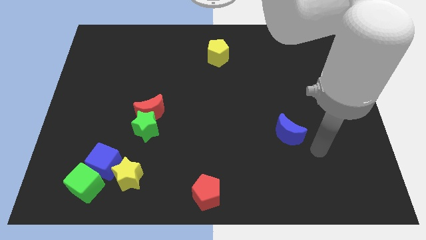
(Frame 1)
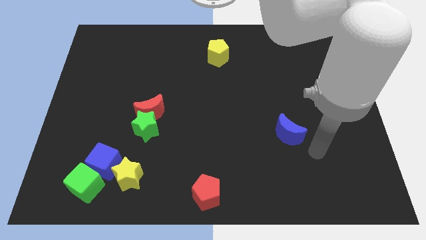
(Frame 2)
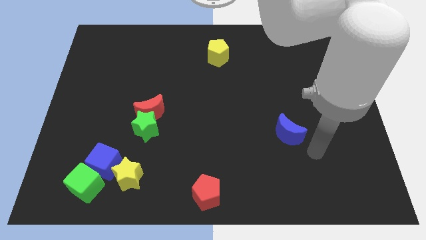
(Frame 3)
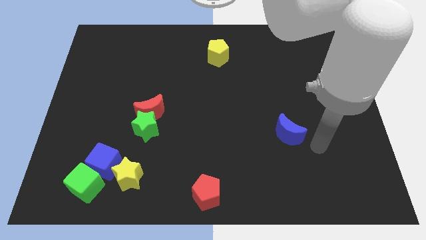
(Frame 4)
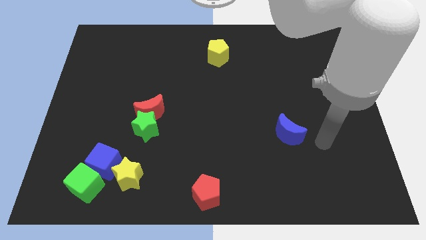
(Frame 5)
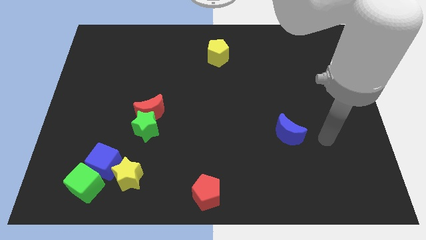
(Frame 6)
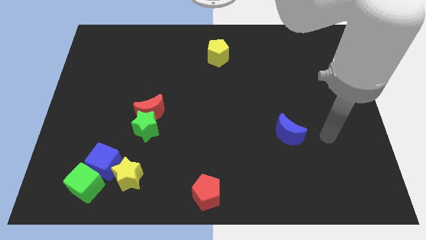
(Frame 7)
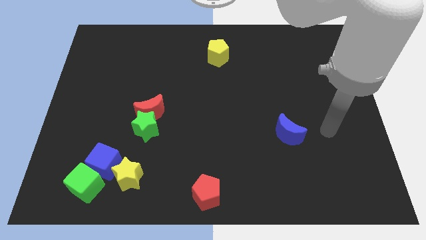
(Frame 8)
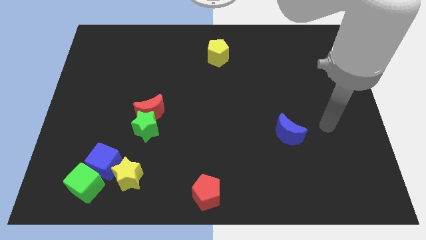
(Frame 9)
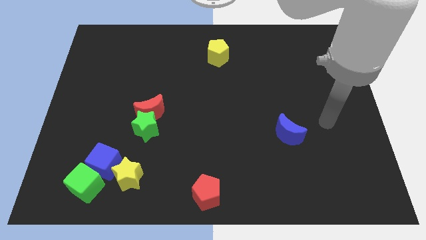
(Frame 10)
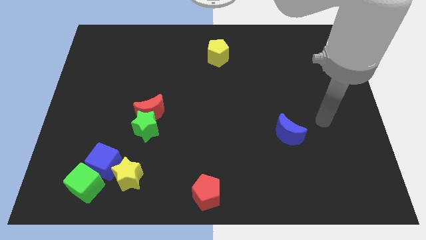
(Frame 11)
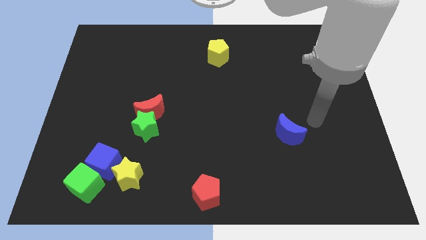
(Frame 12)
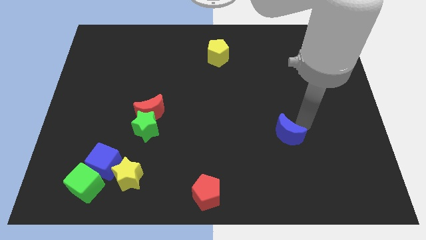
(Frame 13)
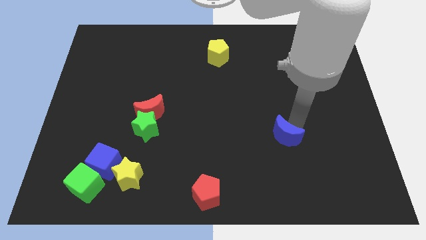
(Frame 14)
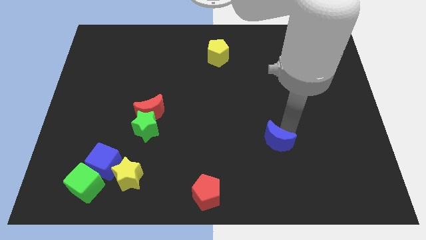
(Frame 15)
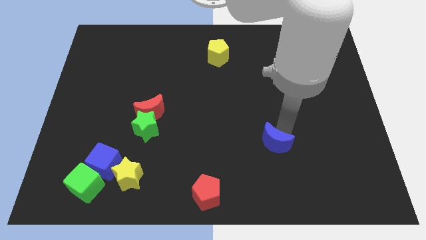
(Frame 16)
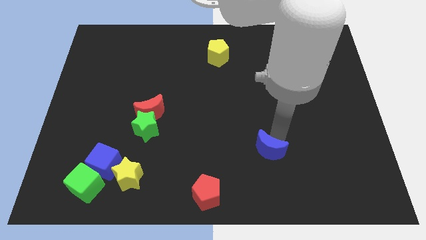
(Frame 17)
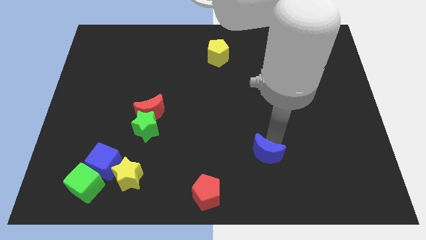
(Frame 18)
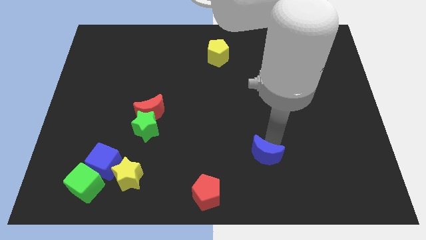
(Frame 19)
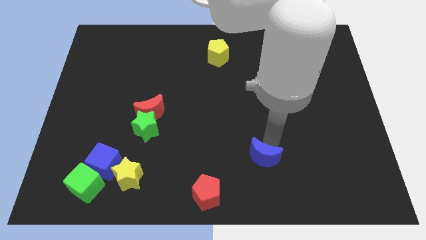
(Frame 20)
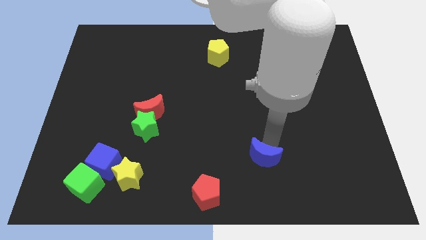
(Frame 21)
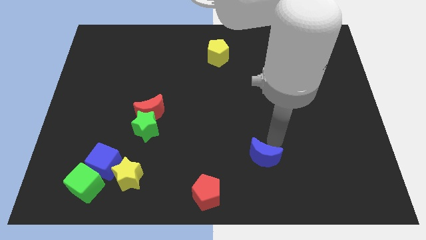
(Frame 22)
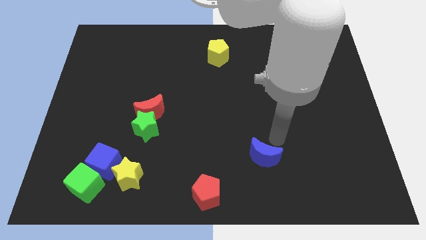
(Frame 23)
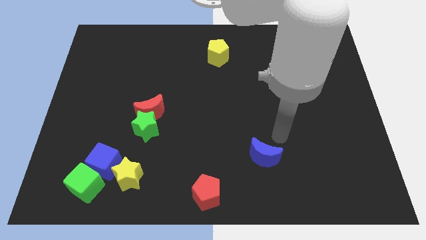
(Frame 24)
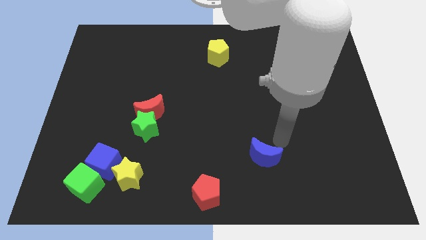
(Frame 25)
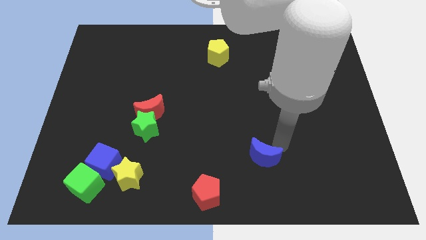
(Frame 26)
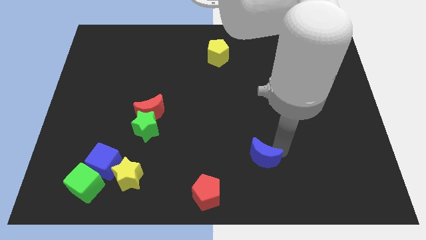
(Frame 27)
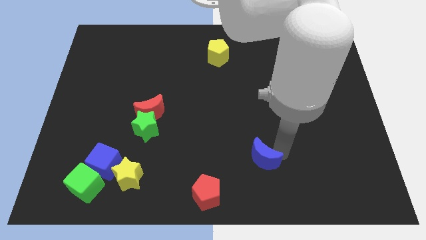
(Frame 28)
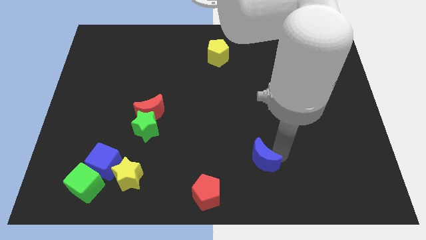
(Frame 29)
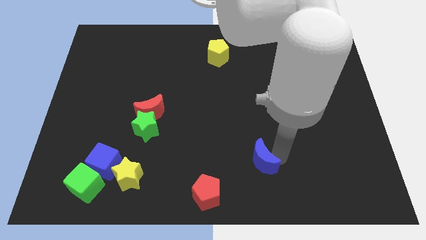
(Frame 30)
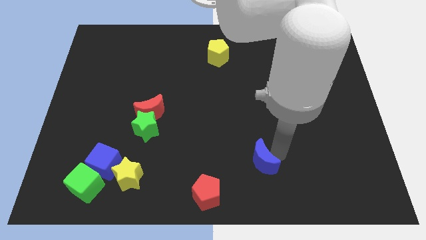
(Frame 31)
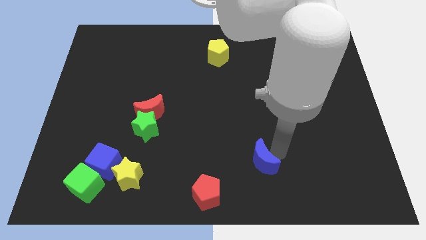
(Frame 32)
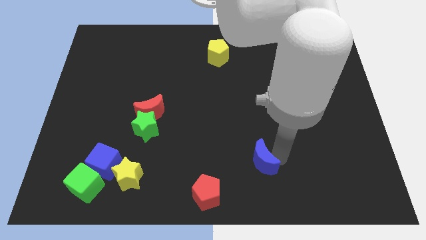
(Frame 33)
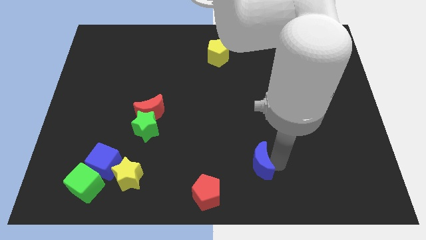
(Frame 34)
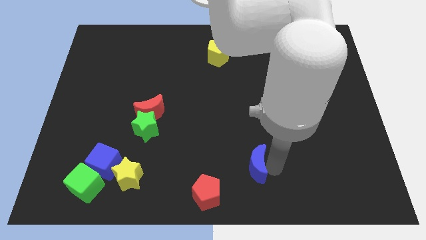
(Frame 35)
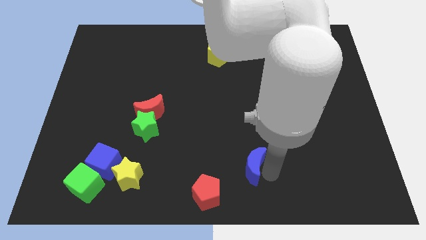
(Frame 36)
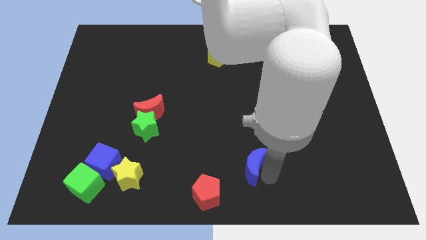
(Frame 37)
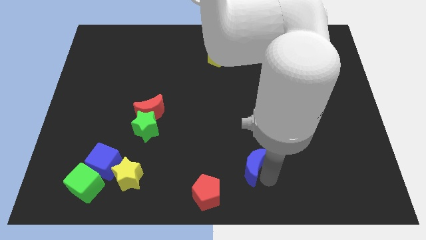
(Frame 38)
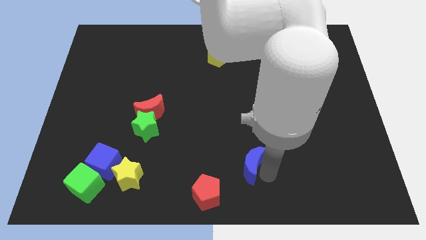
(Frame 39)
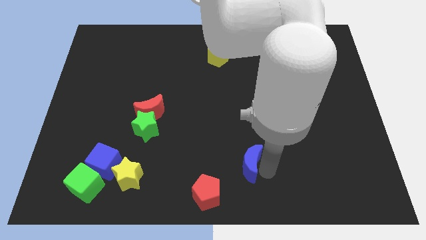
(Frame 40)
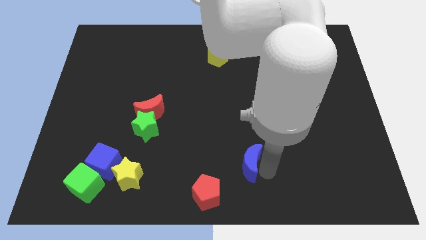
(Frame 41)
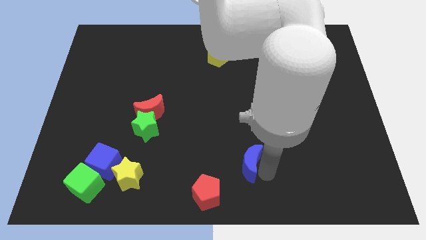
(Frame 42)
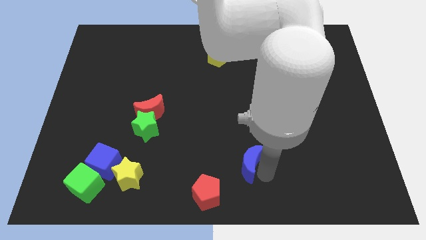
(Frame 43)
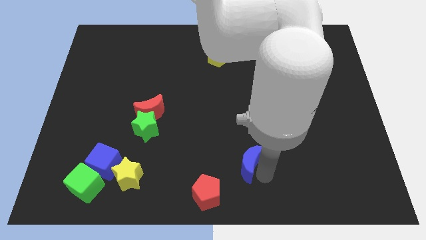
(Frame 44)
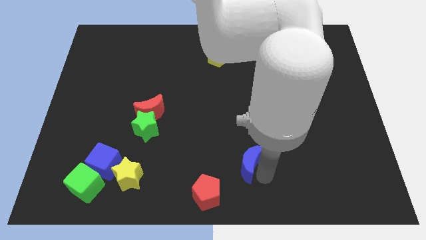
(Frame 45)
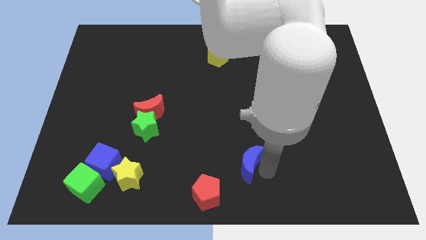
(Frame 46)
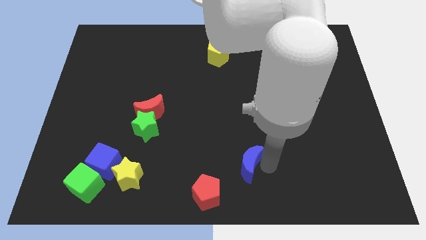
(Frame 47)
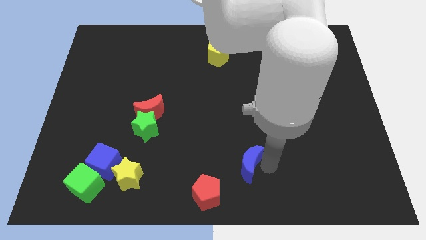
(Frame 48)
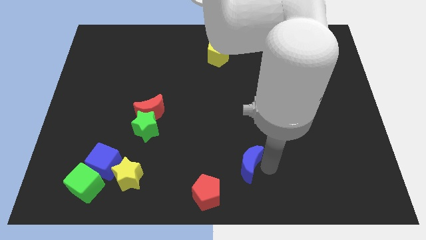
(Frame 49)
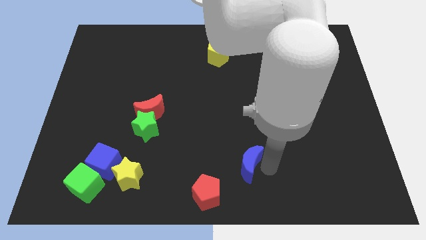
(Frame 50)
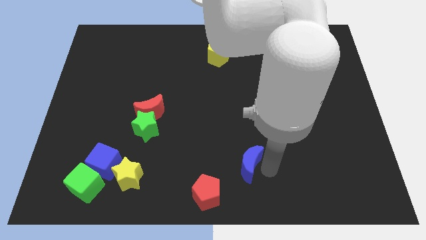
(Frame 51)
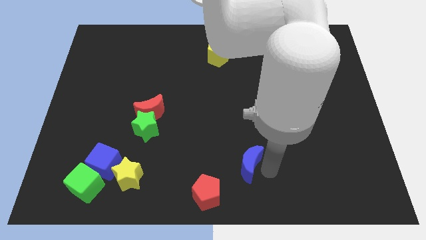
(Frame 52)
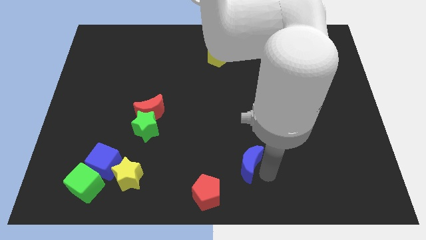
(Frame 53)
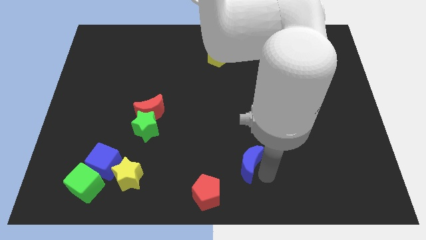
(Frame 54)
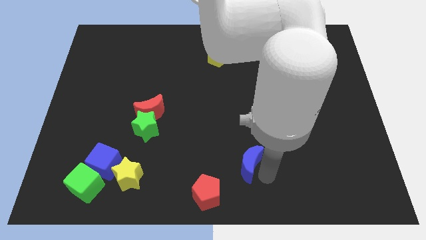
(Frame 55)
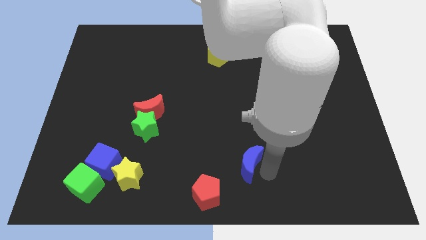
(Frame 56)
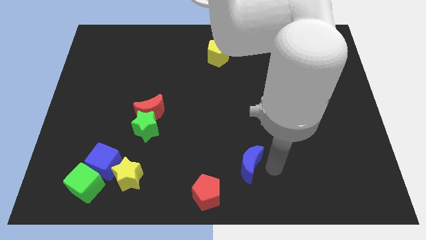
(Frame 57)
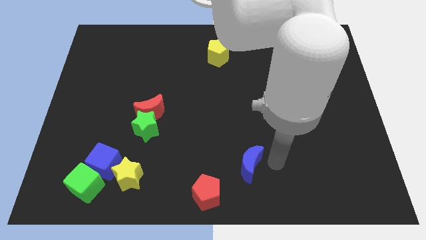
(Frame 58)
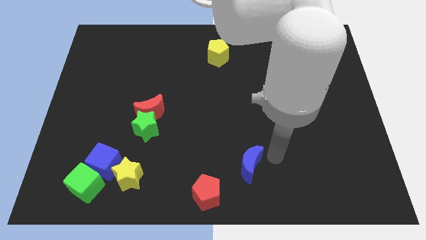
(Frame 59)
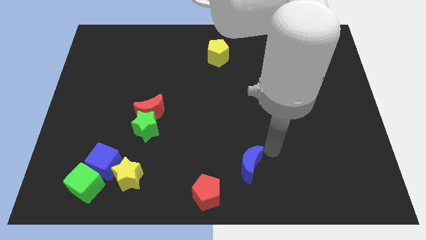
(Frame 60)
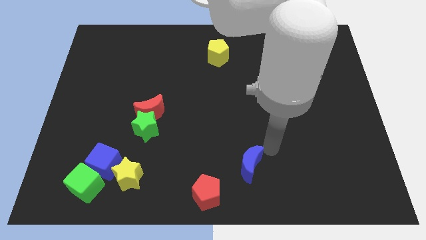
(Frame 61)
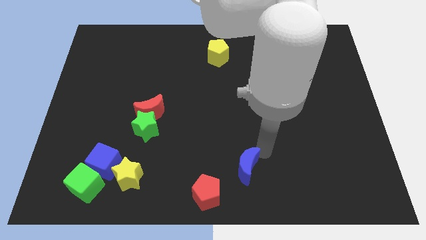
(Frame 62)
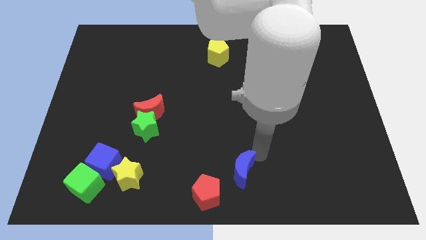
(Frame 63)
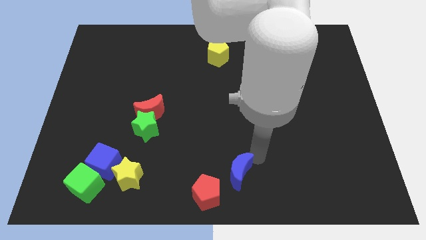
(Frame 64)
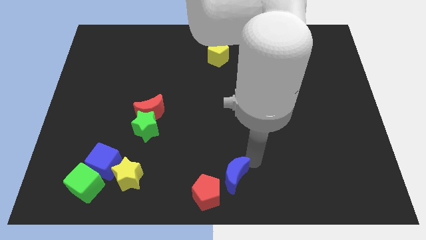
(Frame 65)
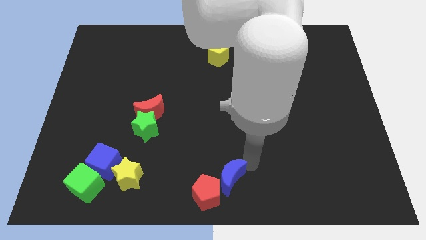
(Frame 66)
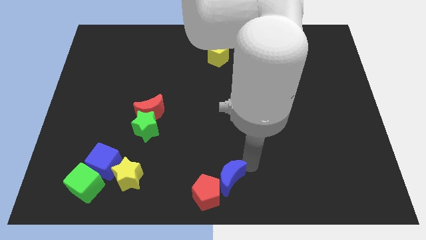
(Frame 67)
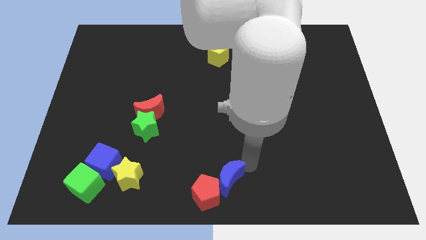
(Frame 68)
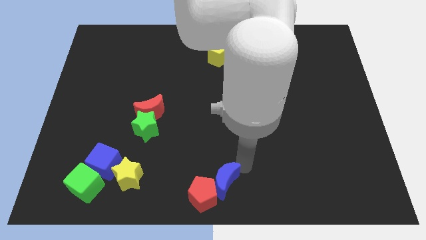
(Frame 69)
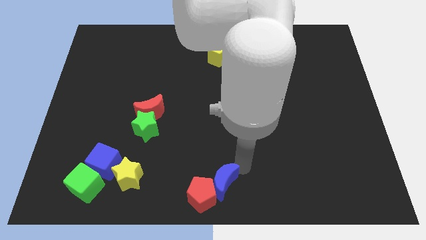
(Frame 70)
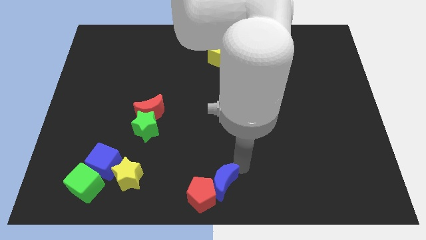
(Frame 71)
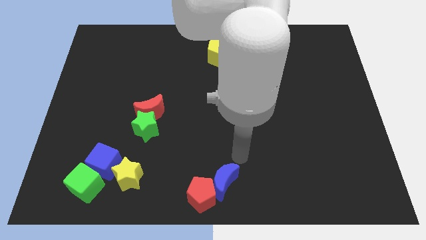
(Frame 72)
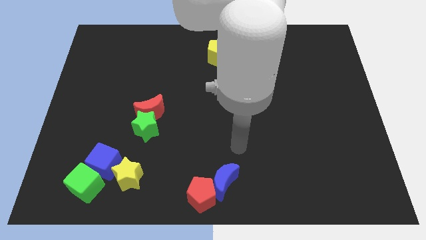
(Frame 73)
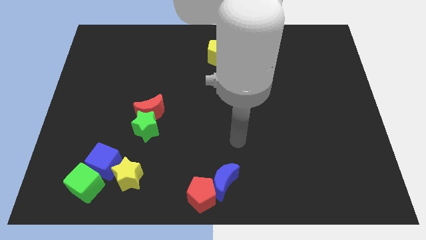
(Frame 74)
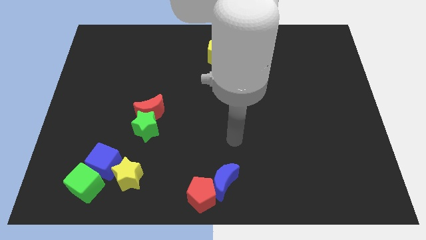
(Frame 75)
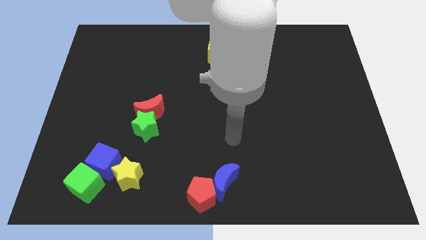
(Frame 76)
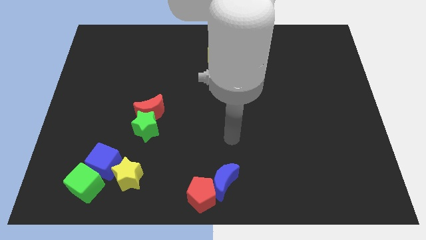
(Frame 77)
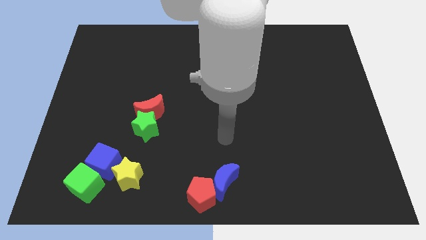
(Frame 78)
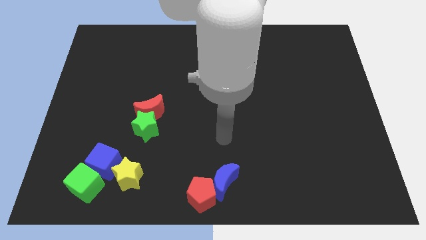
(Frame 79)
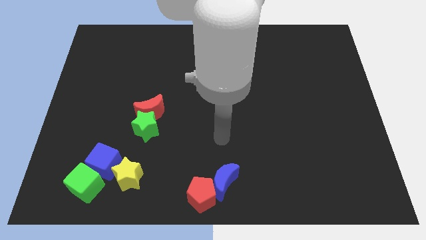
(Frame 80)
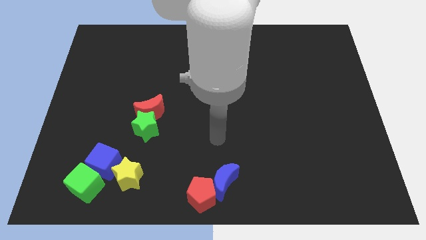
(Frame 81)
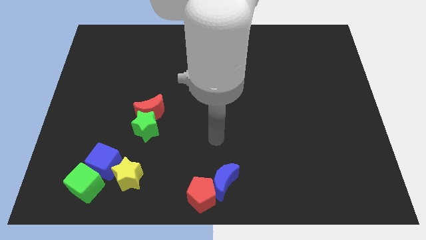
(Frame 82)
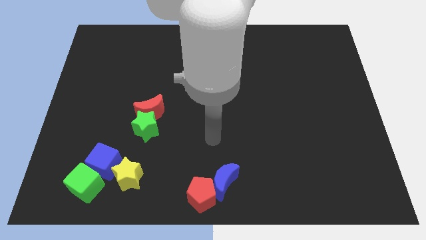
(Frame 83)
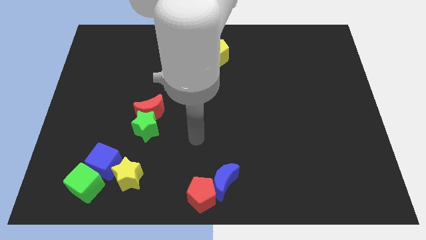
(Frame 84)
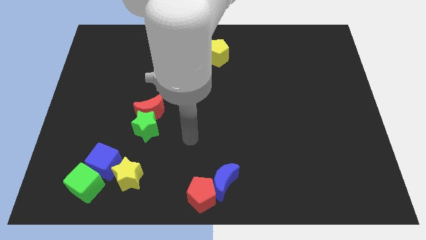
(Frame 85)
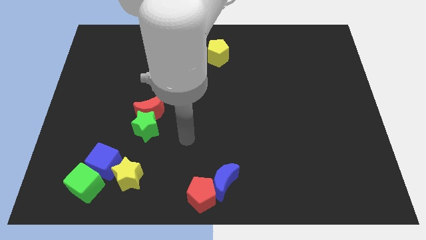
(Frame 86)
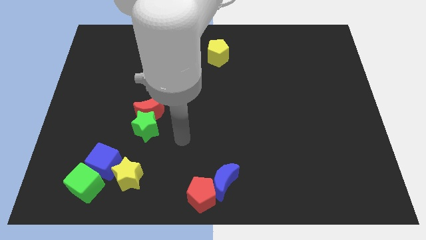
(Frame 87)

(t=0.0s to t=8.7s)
push the blue crescent into the red pentagon

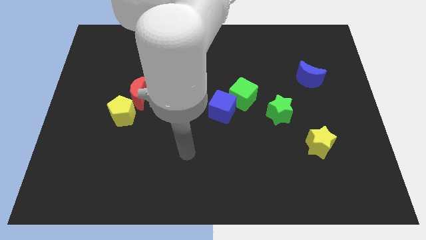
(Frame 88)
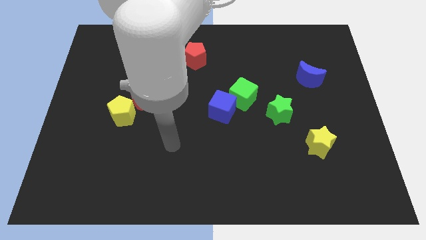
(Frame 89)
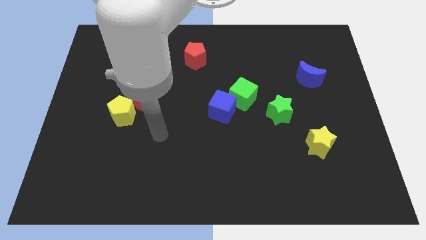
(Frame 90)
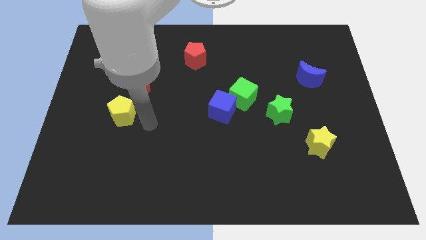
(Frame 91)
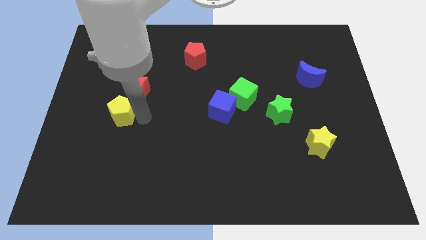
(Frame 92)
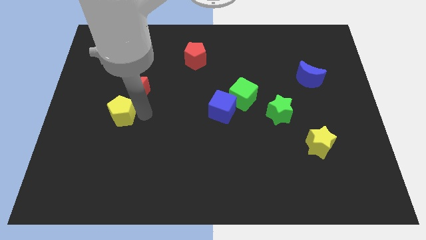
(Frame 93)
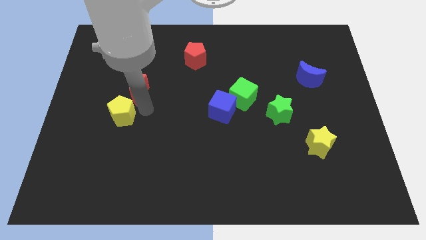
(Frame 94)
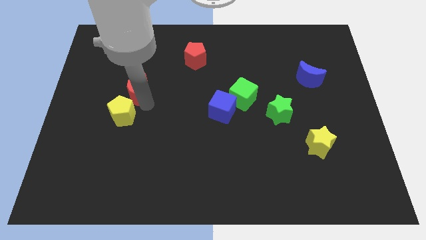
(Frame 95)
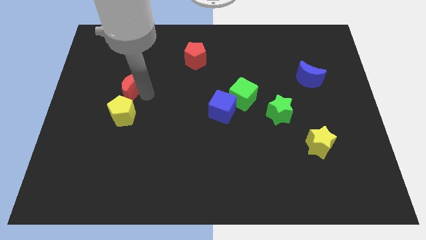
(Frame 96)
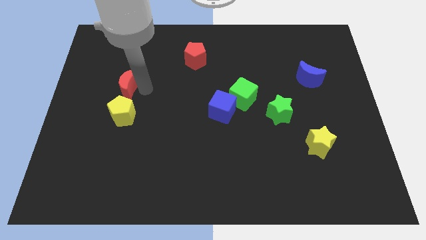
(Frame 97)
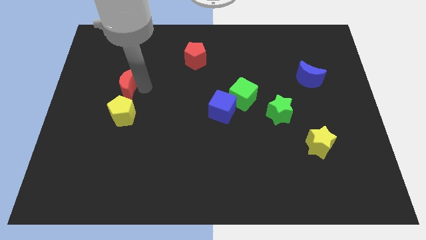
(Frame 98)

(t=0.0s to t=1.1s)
move red moon to the top of yellow pentagon
